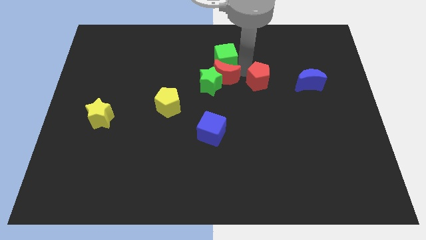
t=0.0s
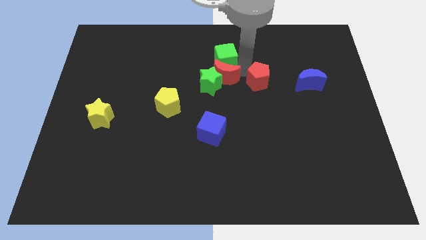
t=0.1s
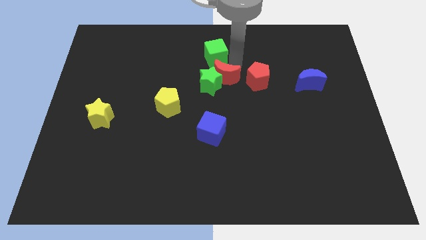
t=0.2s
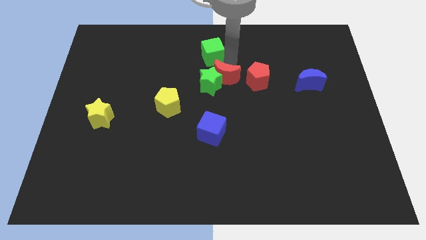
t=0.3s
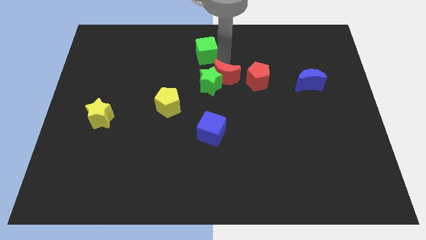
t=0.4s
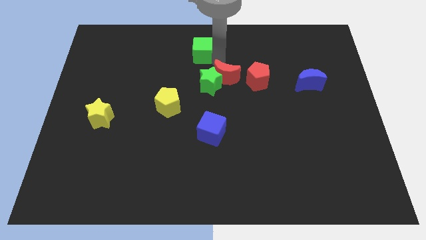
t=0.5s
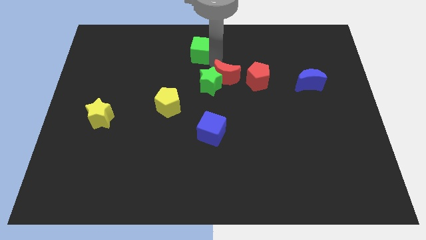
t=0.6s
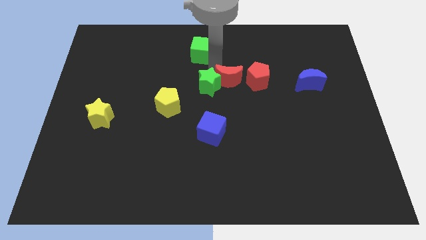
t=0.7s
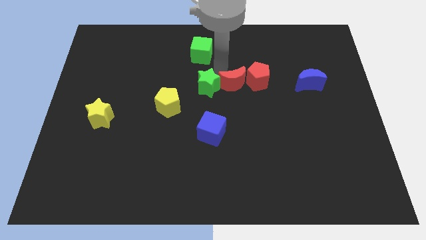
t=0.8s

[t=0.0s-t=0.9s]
separate the green cube and red moon from each other

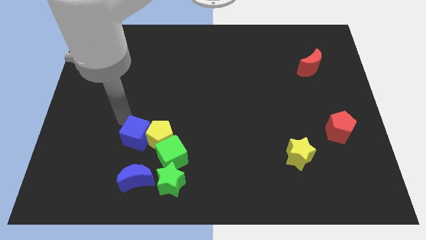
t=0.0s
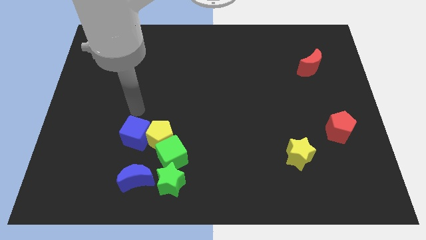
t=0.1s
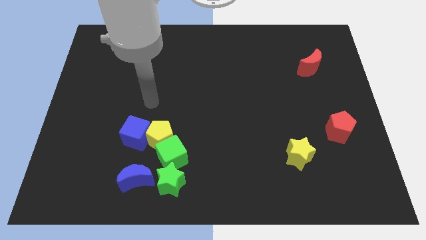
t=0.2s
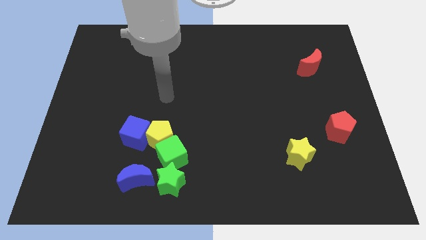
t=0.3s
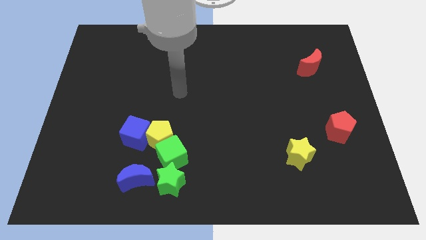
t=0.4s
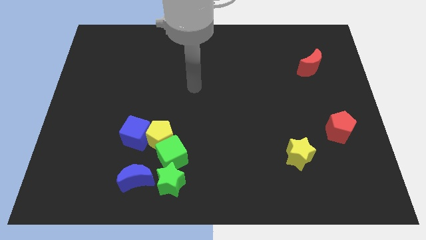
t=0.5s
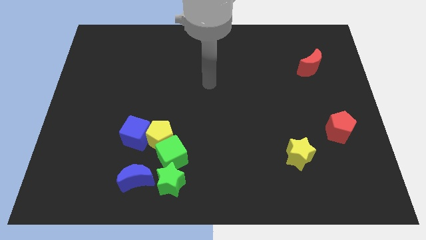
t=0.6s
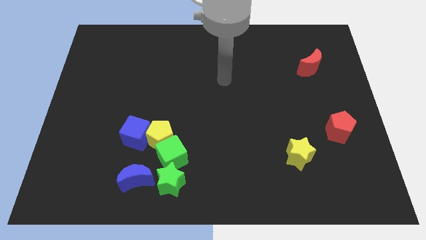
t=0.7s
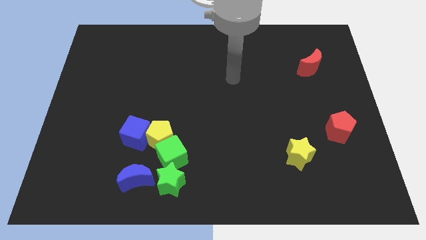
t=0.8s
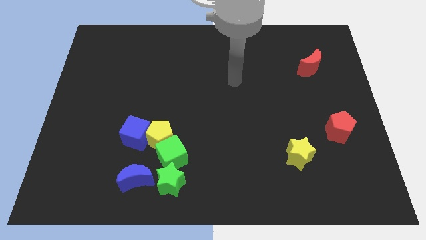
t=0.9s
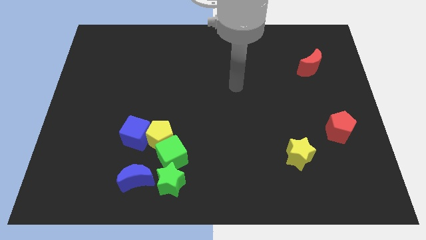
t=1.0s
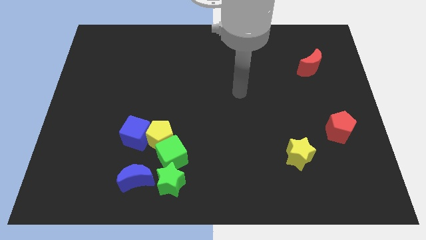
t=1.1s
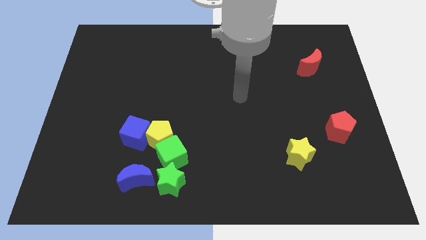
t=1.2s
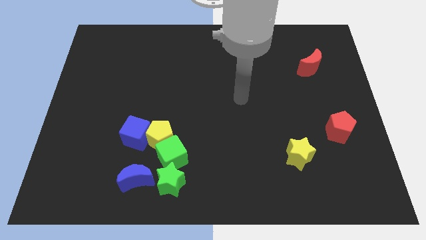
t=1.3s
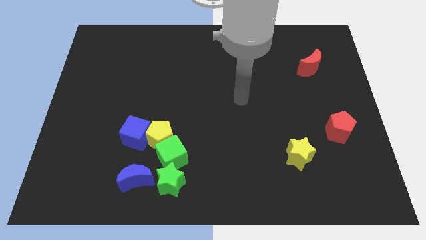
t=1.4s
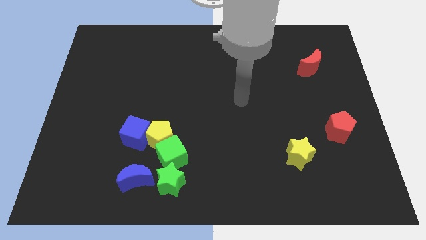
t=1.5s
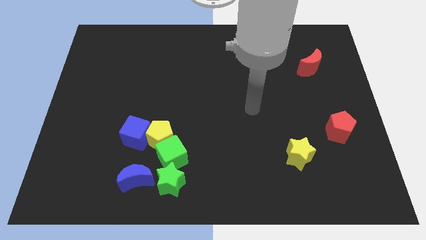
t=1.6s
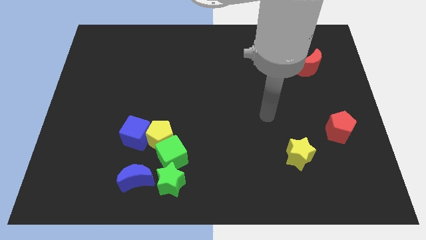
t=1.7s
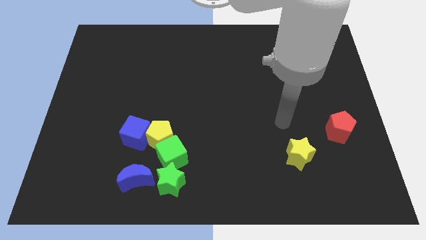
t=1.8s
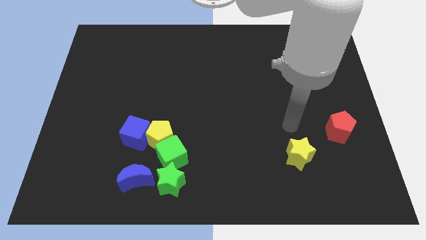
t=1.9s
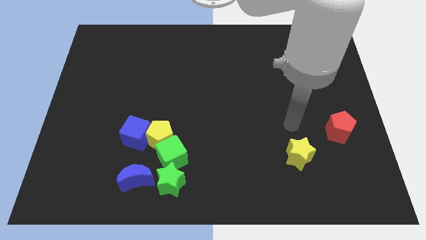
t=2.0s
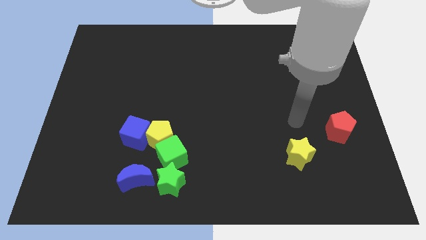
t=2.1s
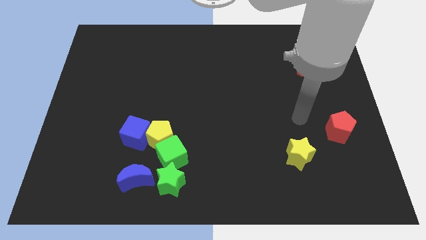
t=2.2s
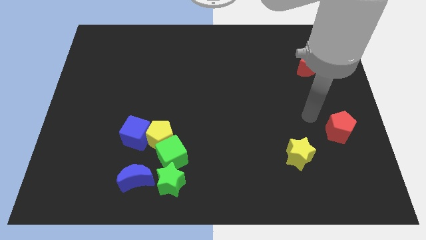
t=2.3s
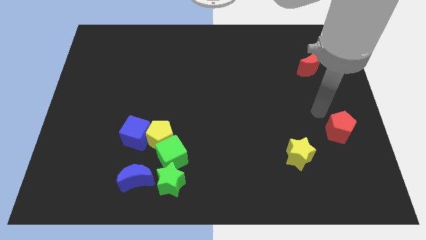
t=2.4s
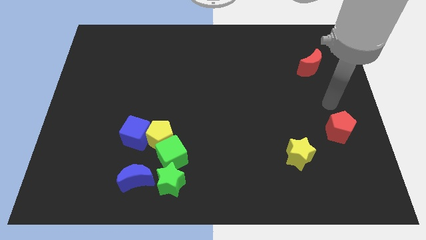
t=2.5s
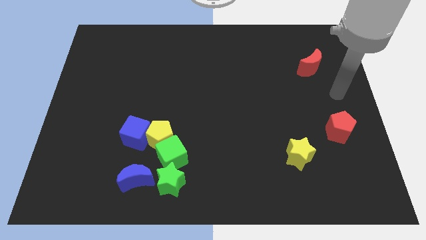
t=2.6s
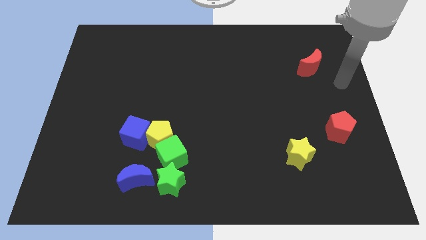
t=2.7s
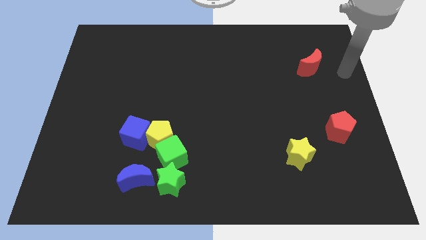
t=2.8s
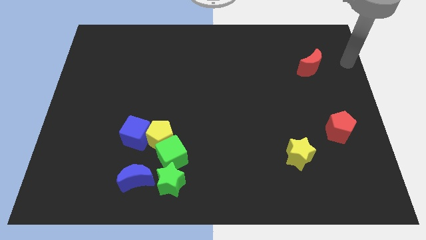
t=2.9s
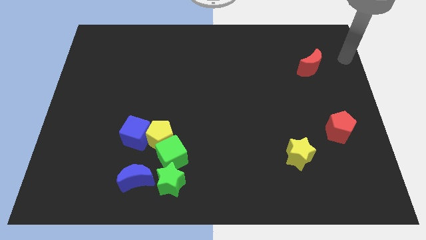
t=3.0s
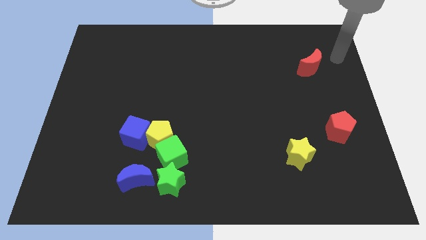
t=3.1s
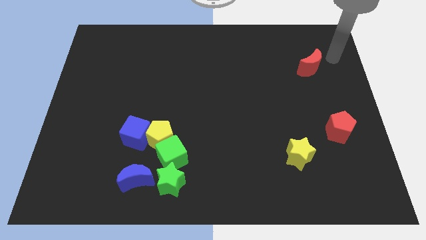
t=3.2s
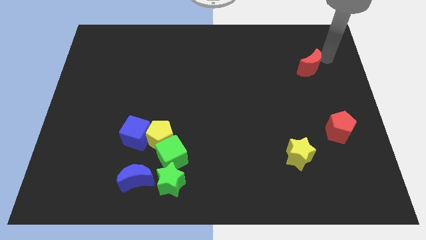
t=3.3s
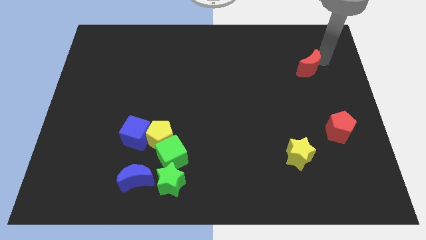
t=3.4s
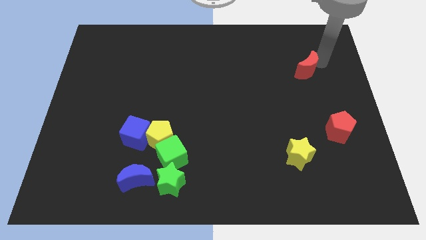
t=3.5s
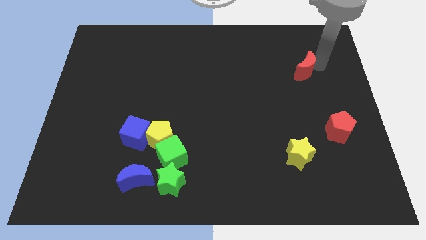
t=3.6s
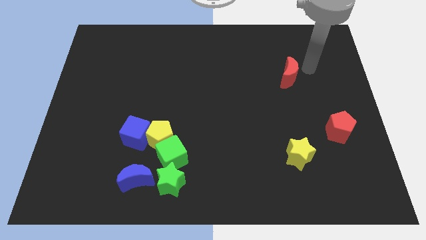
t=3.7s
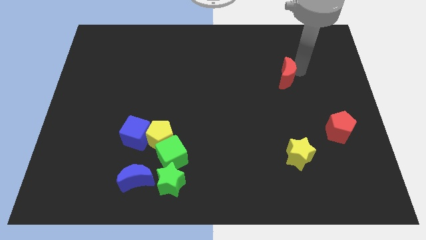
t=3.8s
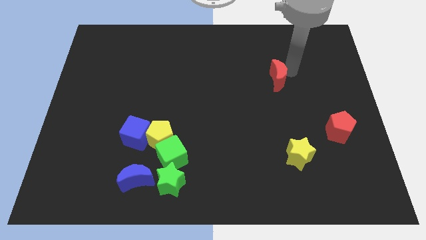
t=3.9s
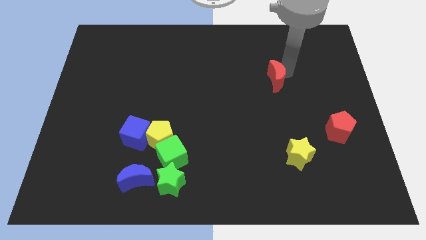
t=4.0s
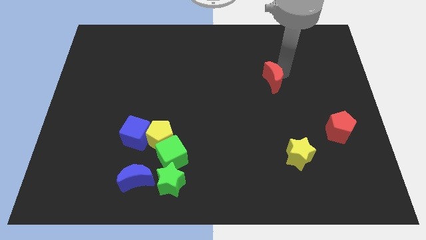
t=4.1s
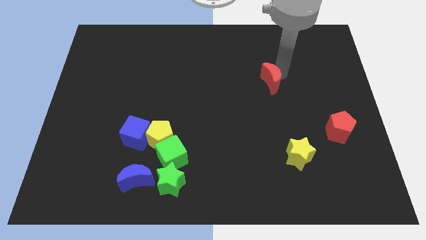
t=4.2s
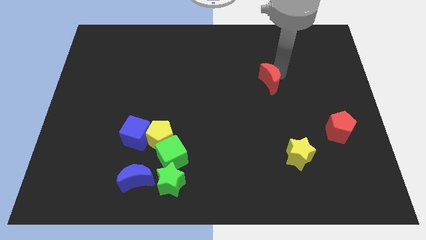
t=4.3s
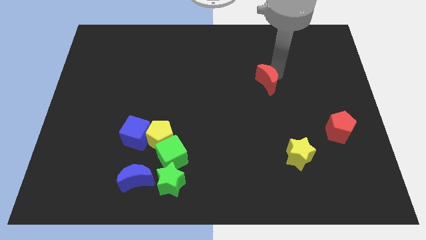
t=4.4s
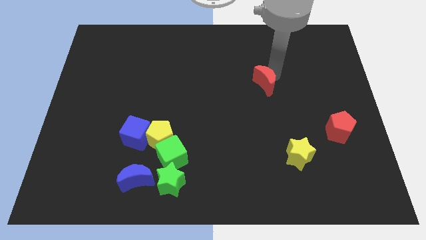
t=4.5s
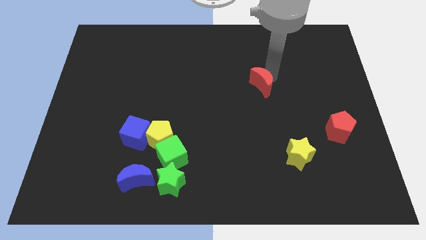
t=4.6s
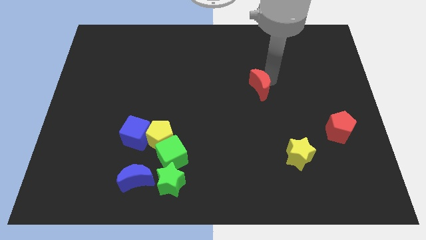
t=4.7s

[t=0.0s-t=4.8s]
place the red moon above the yellow star

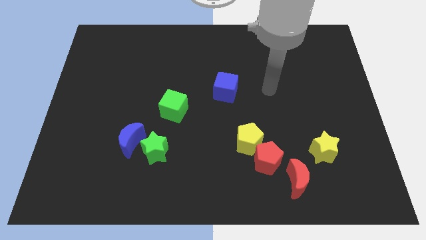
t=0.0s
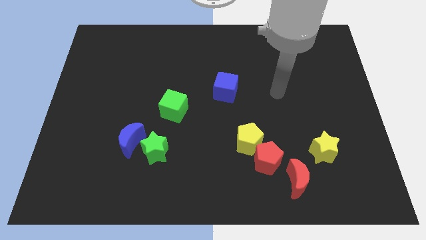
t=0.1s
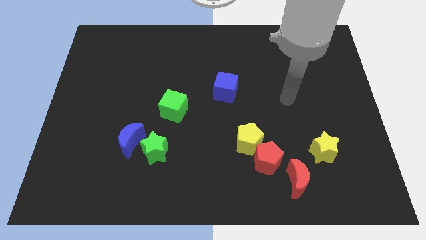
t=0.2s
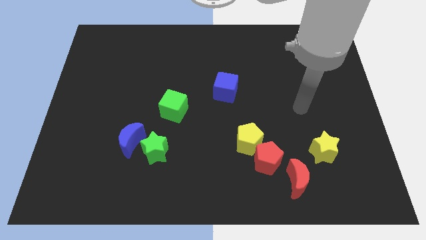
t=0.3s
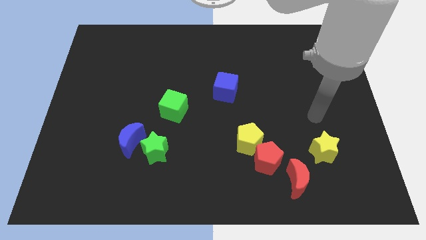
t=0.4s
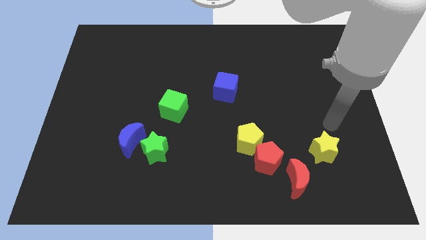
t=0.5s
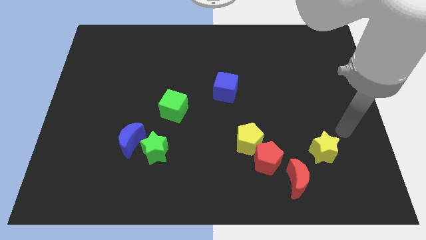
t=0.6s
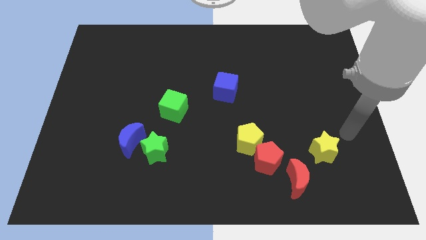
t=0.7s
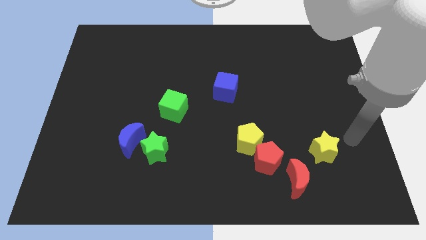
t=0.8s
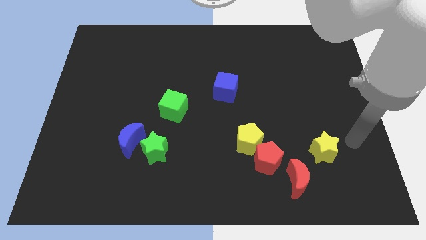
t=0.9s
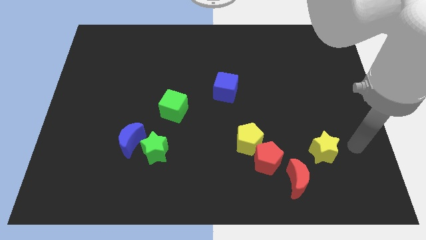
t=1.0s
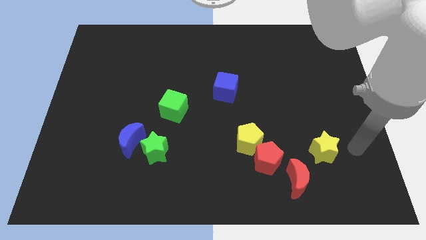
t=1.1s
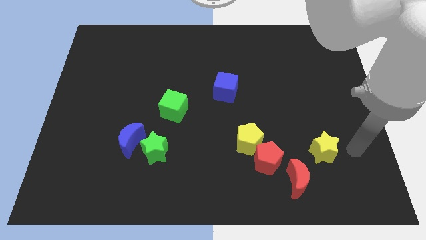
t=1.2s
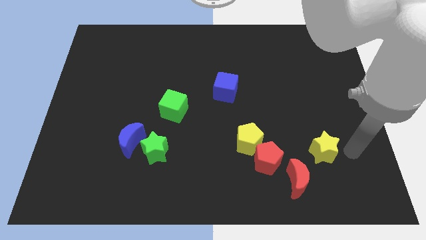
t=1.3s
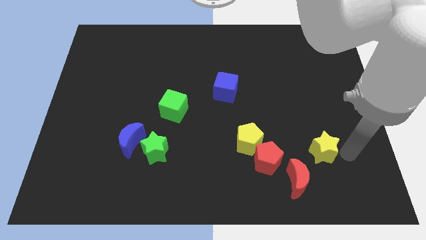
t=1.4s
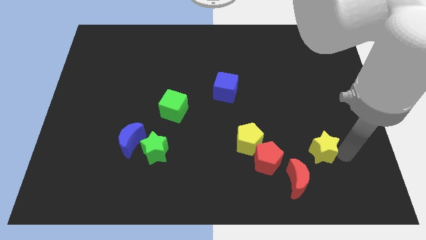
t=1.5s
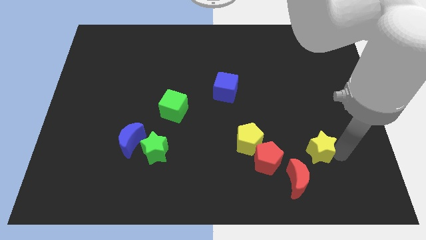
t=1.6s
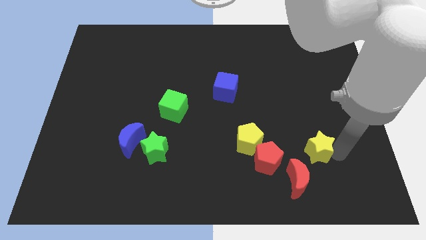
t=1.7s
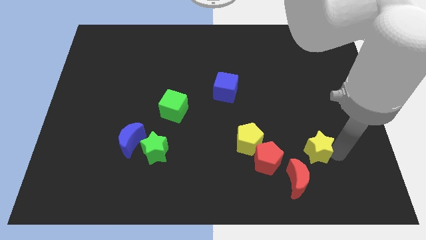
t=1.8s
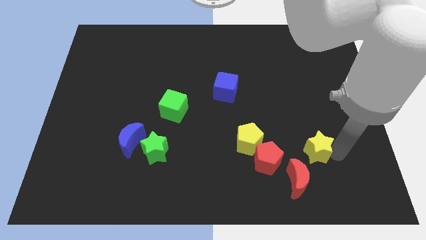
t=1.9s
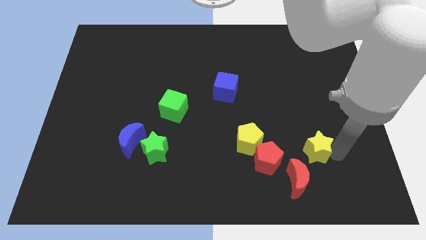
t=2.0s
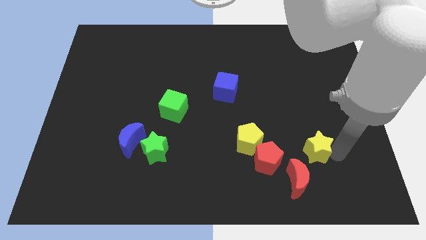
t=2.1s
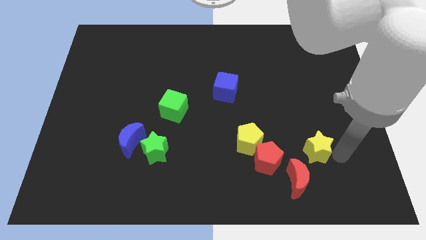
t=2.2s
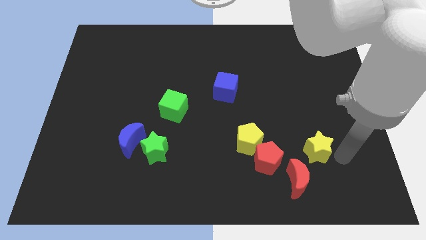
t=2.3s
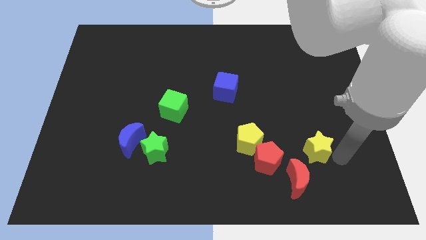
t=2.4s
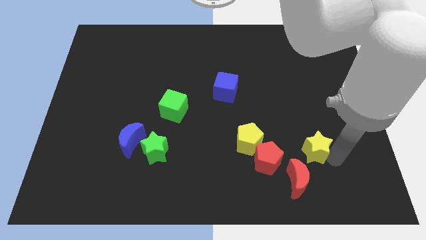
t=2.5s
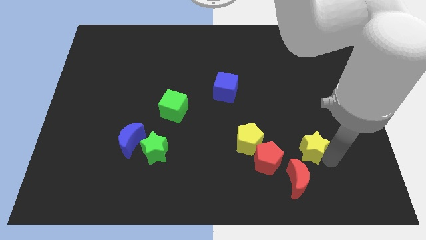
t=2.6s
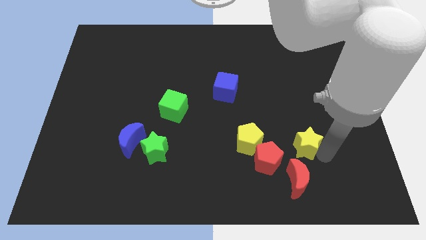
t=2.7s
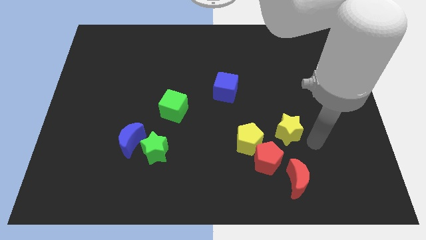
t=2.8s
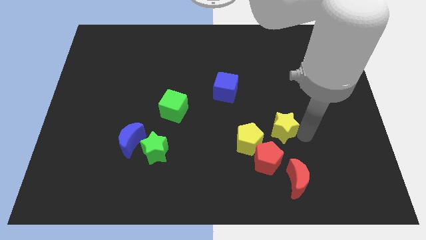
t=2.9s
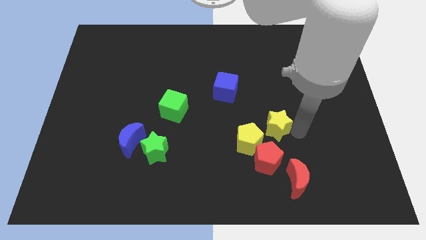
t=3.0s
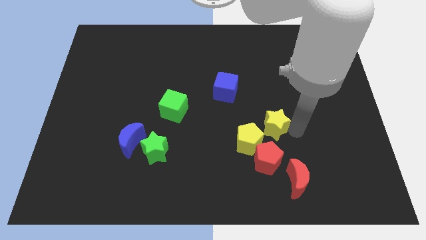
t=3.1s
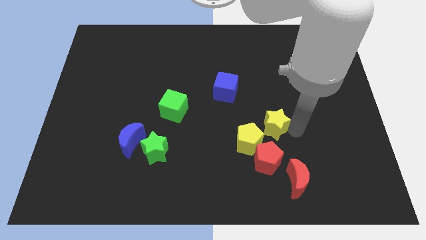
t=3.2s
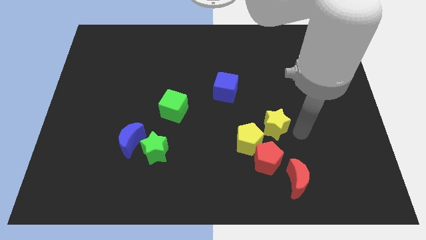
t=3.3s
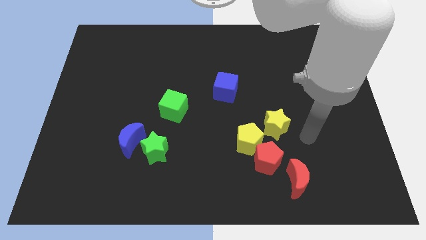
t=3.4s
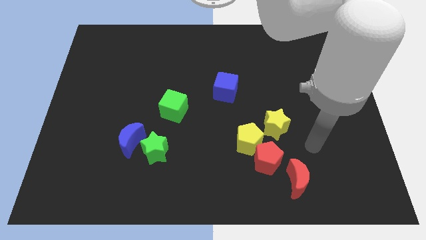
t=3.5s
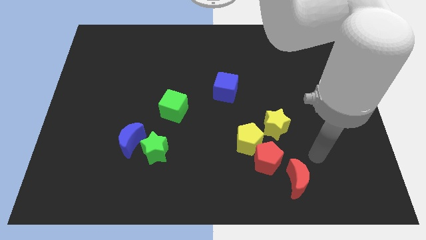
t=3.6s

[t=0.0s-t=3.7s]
place the yellow star diagonal right above yellow pentagon
